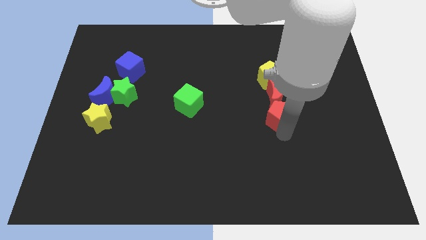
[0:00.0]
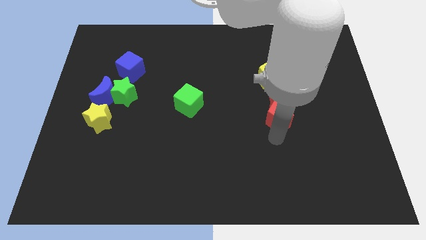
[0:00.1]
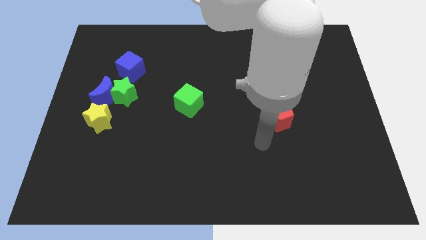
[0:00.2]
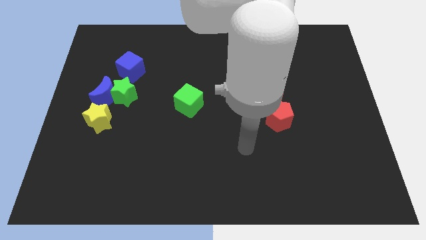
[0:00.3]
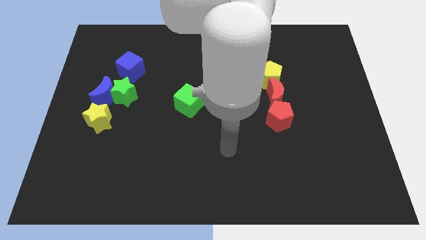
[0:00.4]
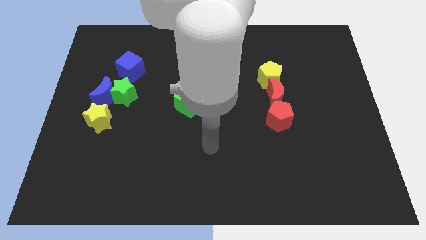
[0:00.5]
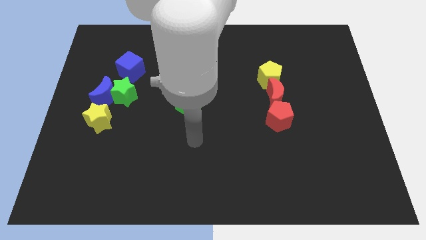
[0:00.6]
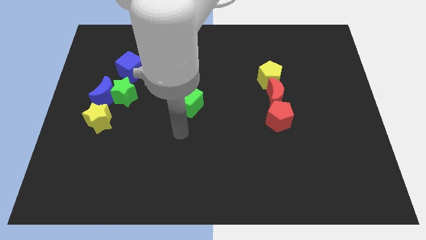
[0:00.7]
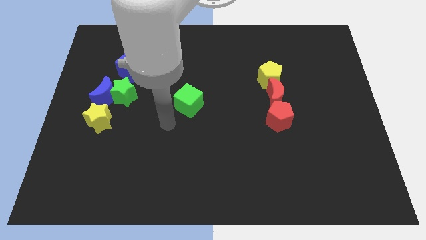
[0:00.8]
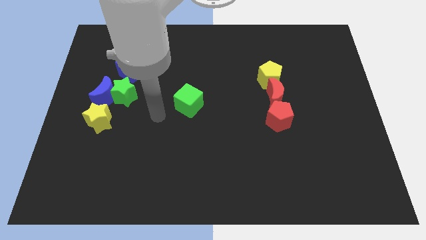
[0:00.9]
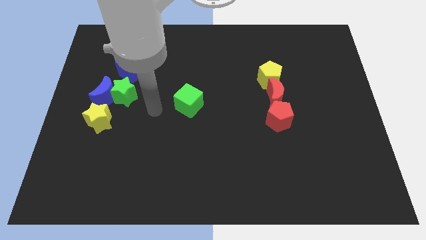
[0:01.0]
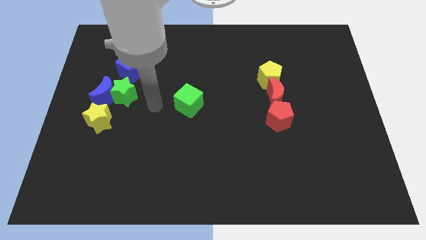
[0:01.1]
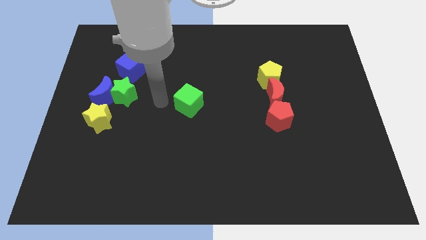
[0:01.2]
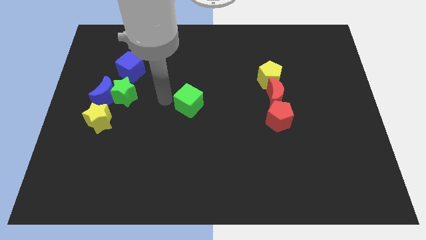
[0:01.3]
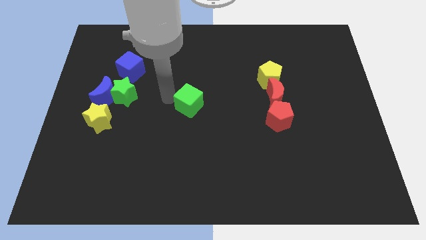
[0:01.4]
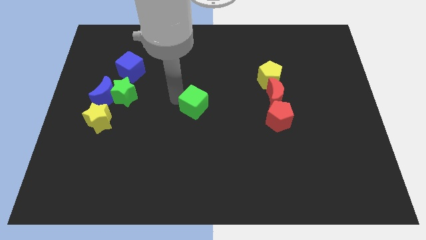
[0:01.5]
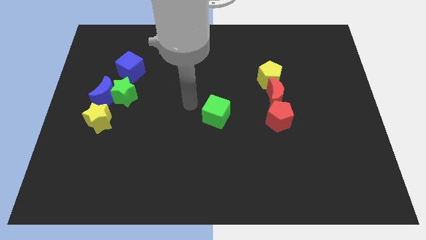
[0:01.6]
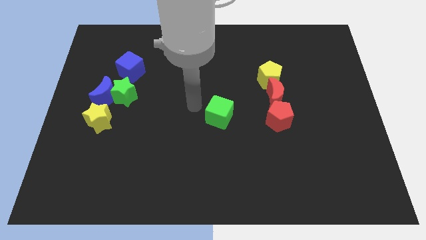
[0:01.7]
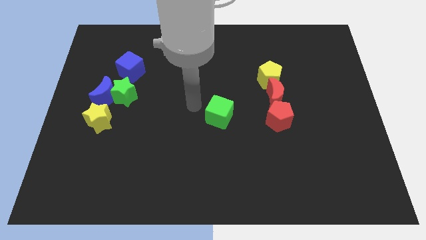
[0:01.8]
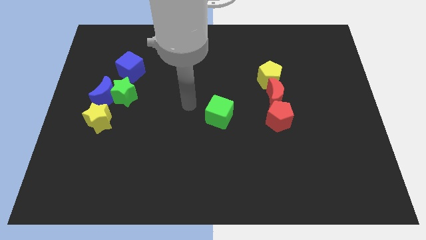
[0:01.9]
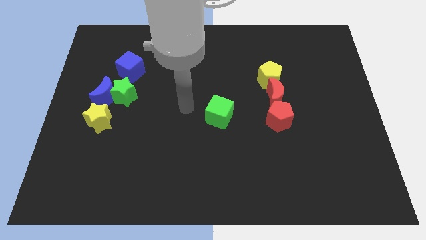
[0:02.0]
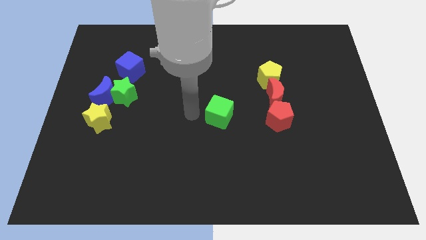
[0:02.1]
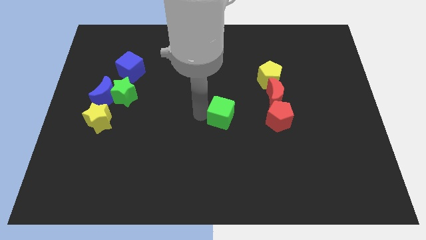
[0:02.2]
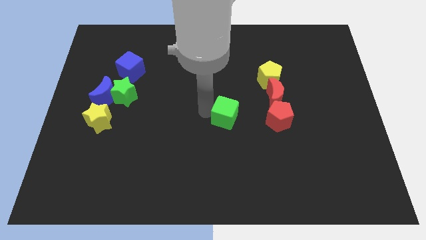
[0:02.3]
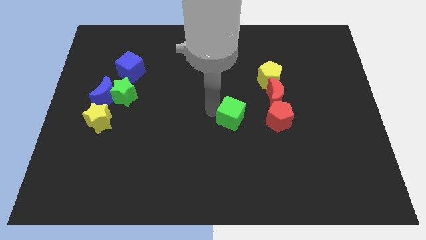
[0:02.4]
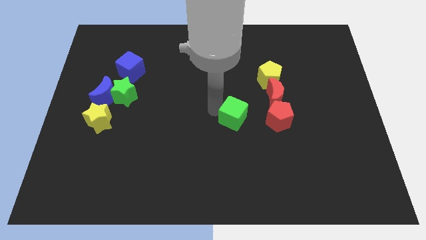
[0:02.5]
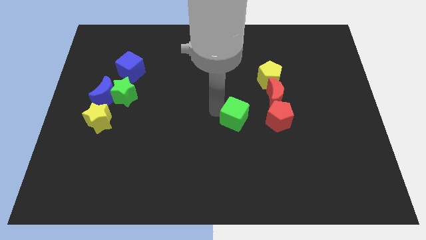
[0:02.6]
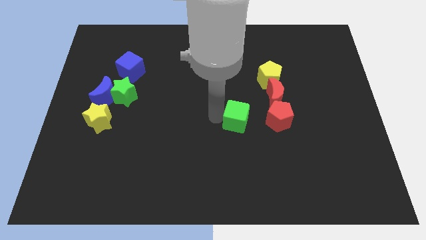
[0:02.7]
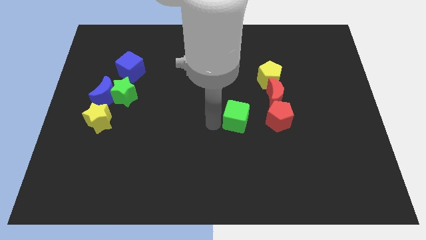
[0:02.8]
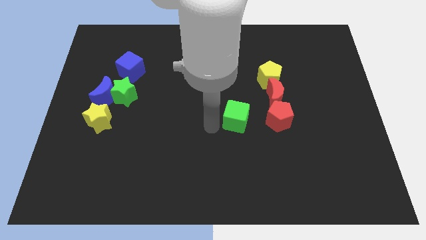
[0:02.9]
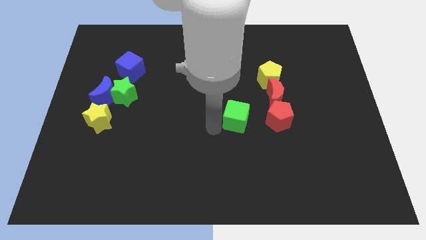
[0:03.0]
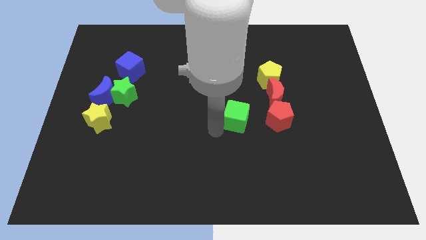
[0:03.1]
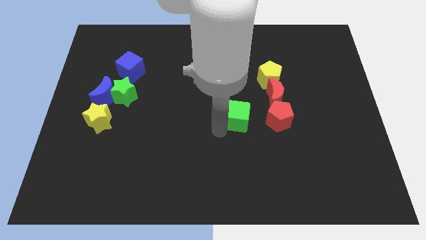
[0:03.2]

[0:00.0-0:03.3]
push the green cube to the left of the red pentagon

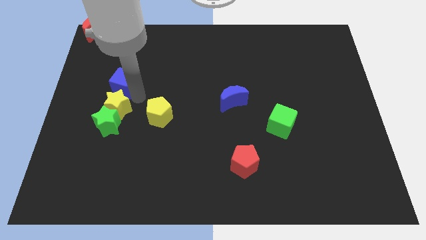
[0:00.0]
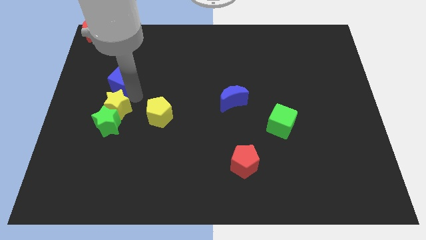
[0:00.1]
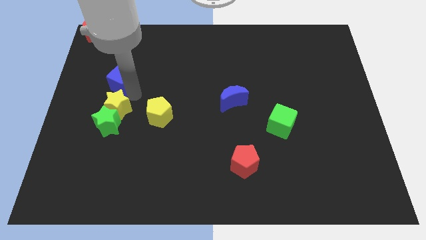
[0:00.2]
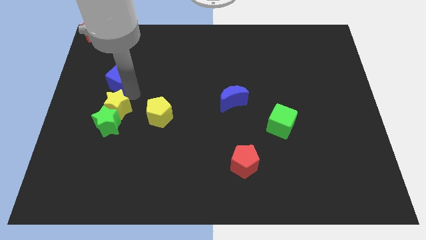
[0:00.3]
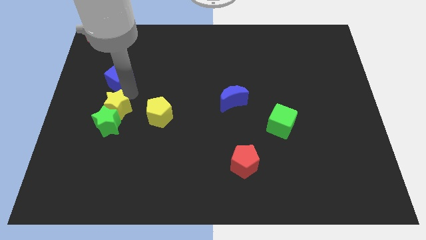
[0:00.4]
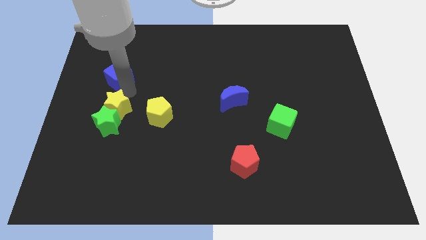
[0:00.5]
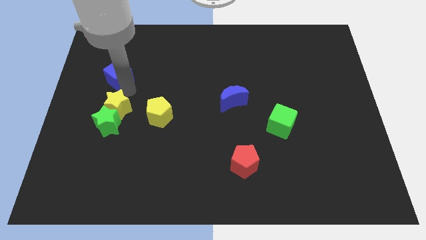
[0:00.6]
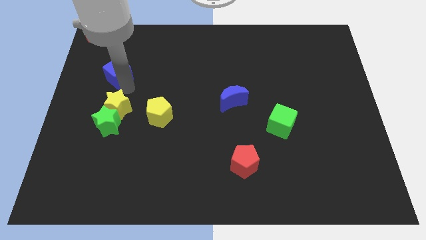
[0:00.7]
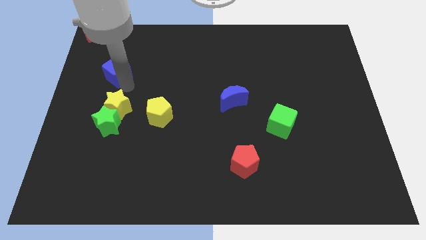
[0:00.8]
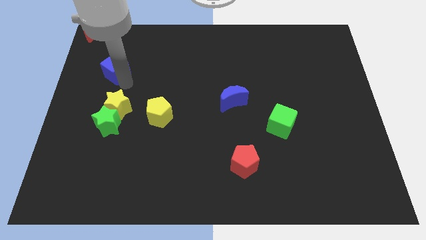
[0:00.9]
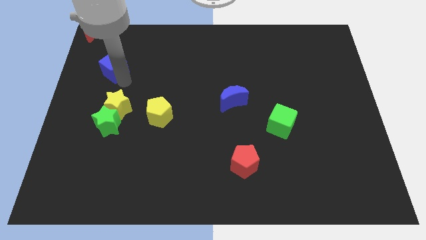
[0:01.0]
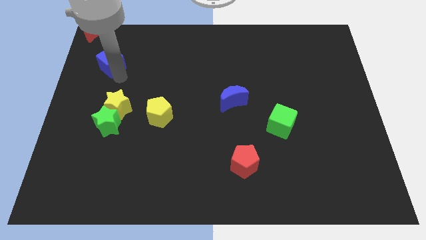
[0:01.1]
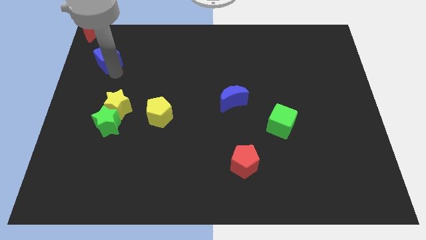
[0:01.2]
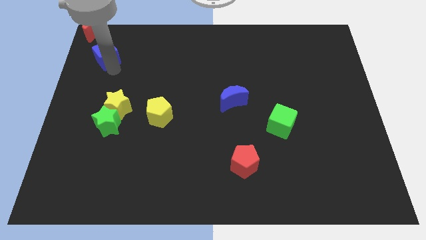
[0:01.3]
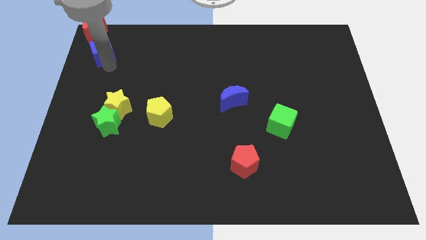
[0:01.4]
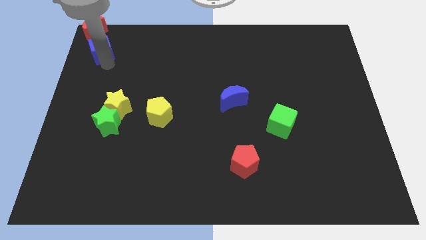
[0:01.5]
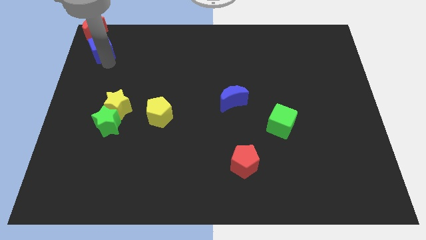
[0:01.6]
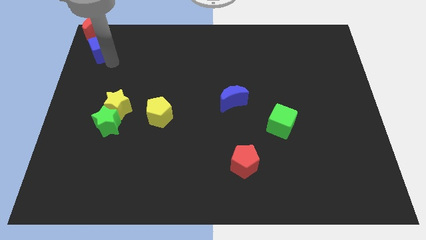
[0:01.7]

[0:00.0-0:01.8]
push the blue cube to the bottom of the red crescent

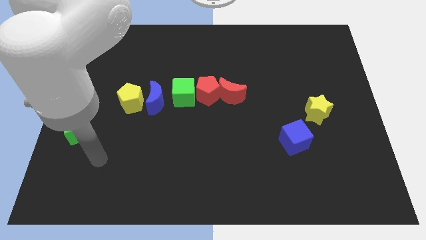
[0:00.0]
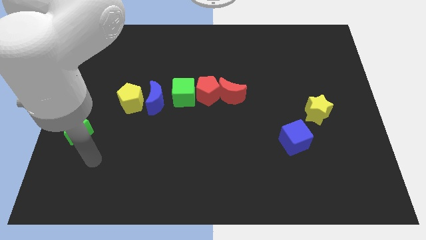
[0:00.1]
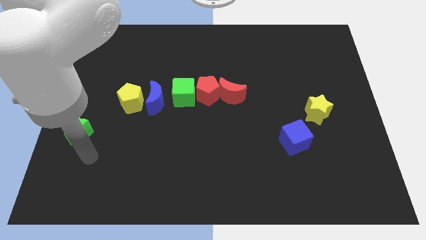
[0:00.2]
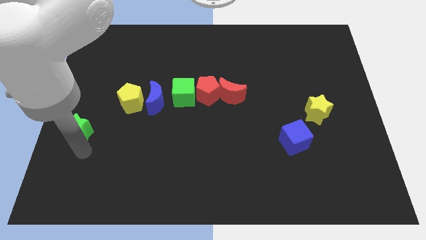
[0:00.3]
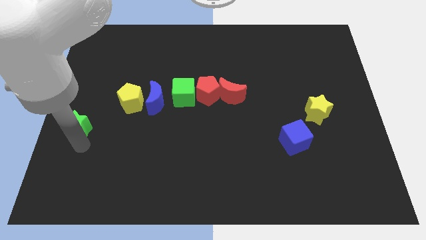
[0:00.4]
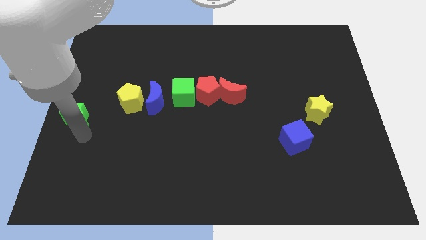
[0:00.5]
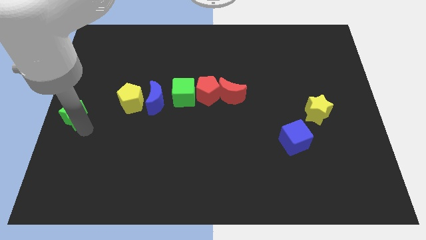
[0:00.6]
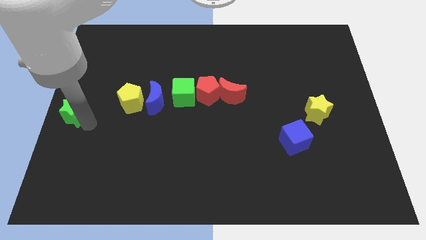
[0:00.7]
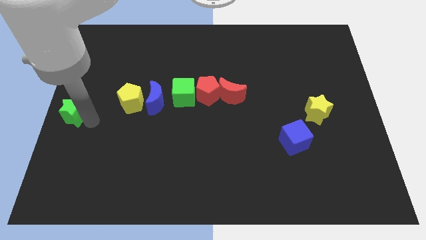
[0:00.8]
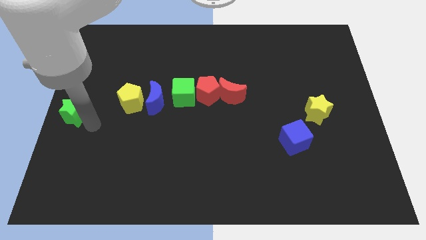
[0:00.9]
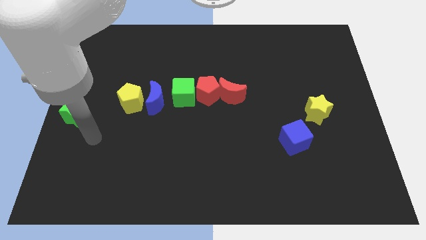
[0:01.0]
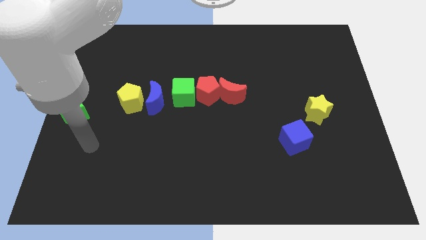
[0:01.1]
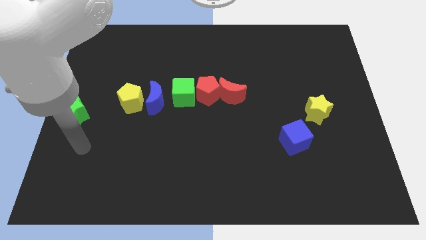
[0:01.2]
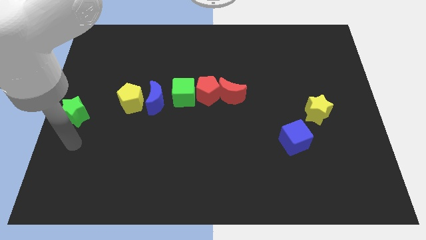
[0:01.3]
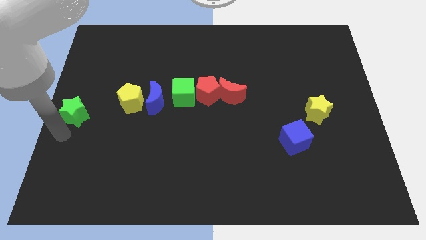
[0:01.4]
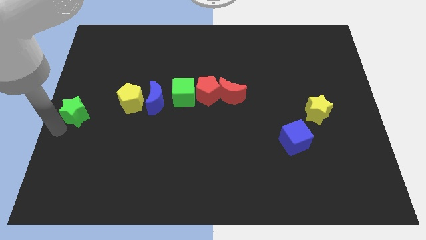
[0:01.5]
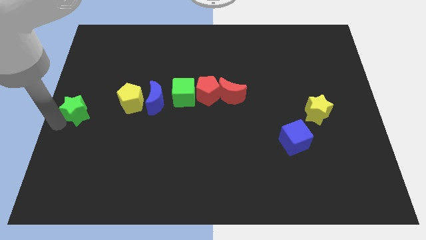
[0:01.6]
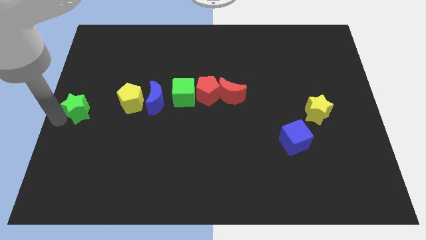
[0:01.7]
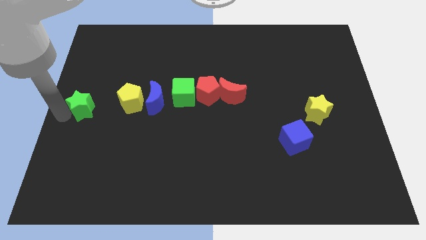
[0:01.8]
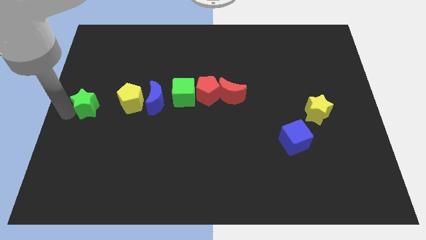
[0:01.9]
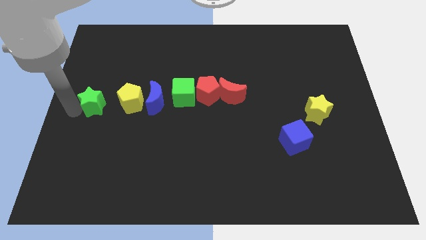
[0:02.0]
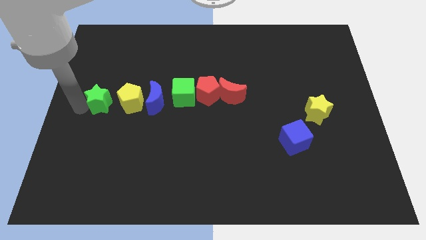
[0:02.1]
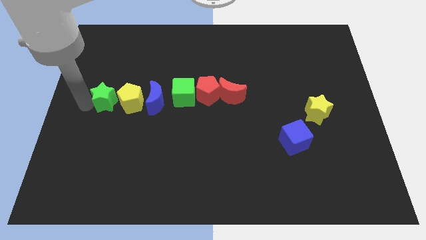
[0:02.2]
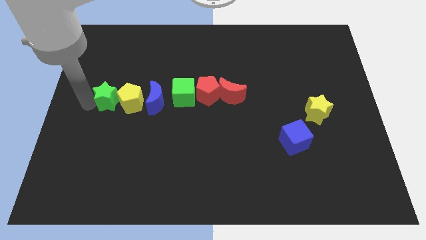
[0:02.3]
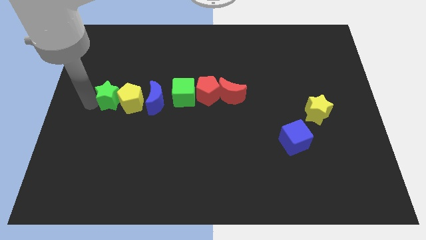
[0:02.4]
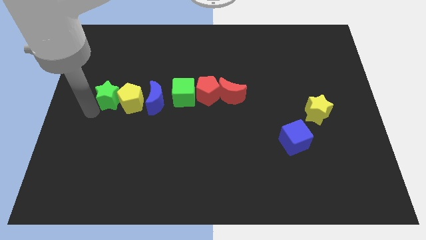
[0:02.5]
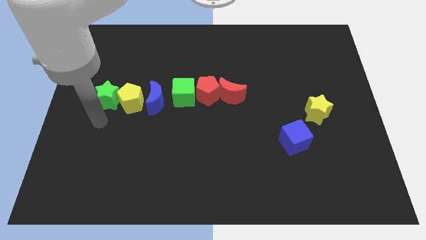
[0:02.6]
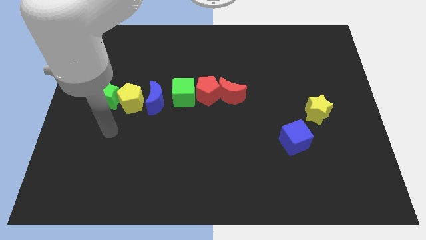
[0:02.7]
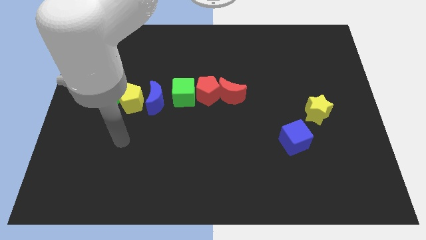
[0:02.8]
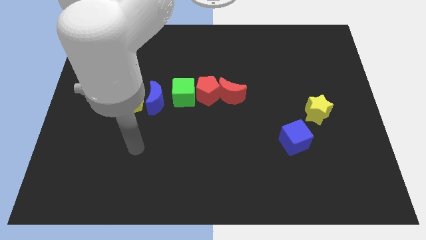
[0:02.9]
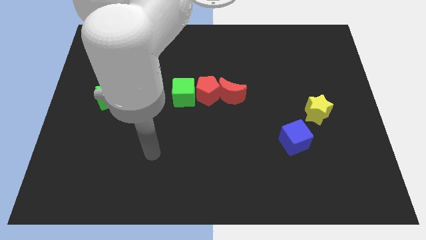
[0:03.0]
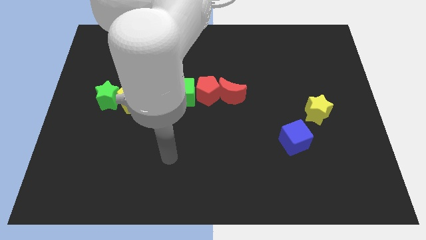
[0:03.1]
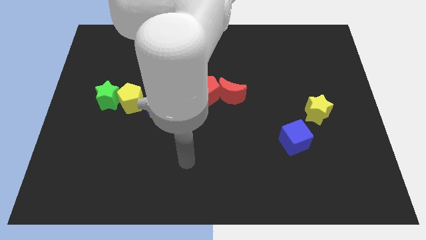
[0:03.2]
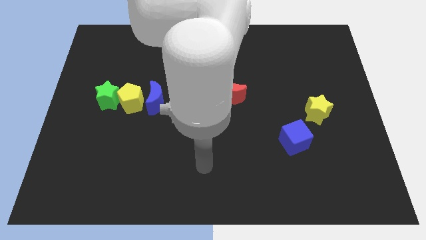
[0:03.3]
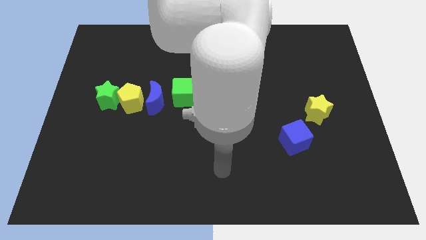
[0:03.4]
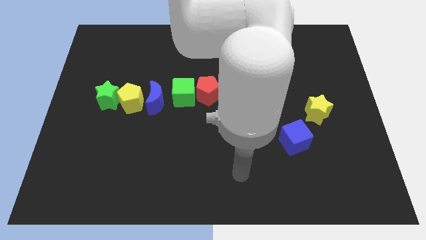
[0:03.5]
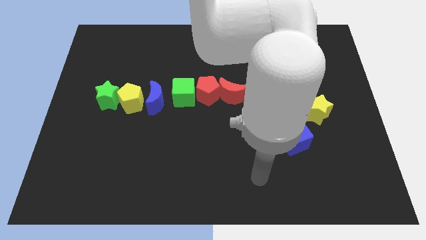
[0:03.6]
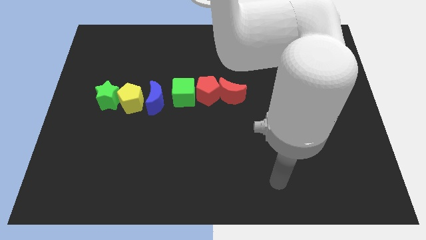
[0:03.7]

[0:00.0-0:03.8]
place green star to the left of yellow pentagon
